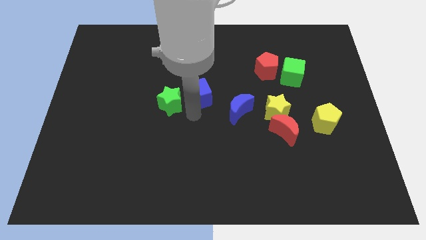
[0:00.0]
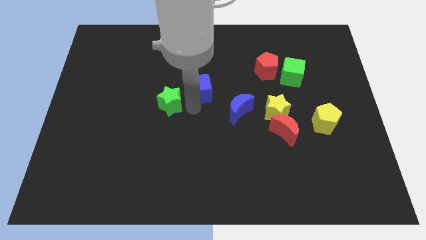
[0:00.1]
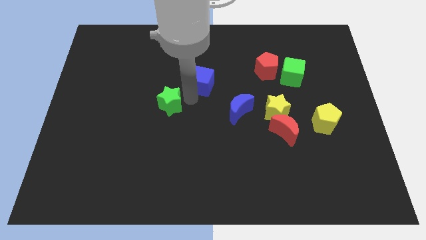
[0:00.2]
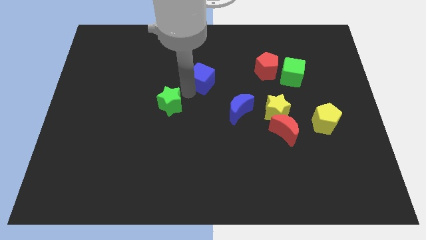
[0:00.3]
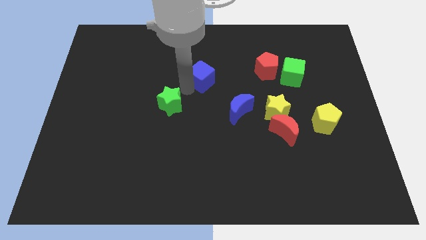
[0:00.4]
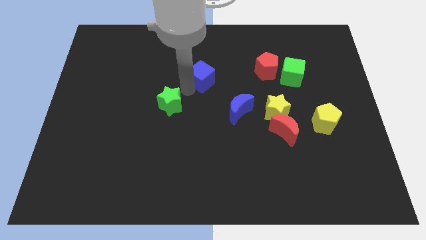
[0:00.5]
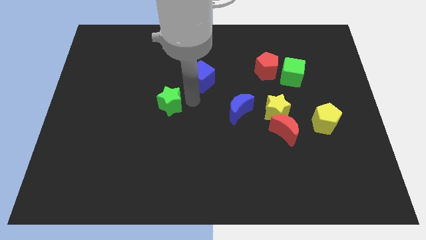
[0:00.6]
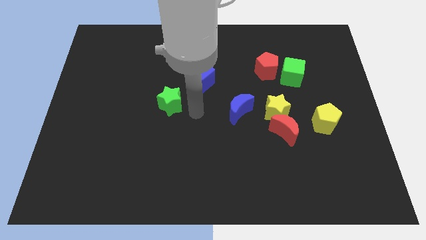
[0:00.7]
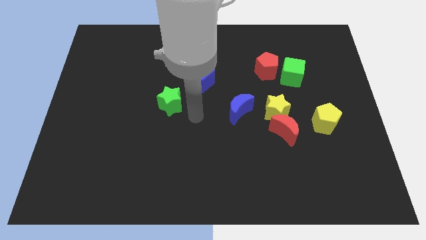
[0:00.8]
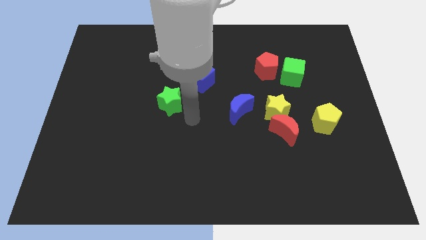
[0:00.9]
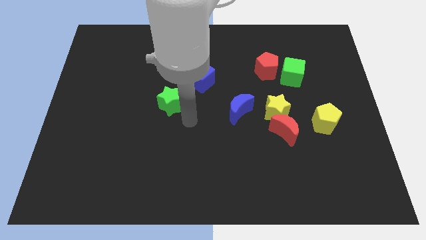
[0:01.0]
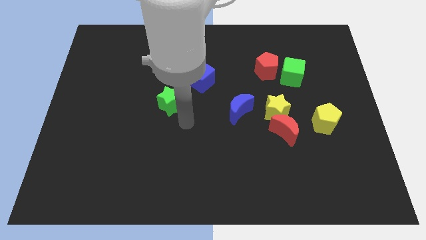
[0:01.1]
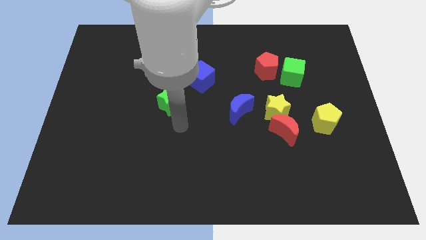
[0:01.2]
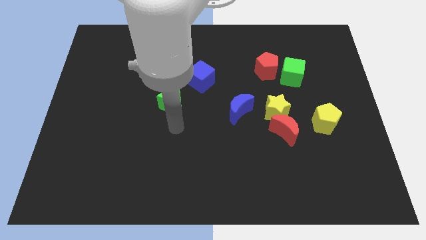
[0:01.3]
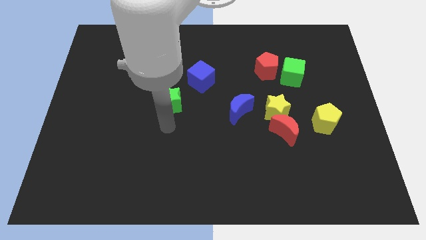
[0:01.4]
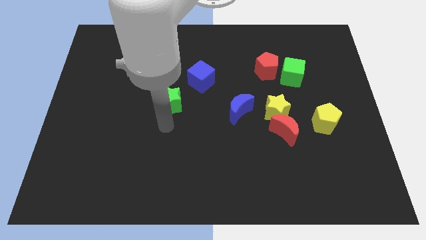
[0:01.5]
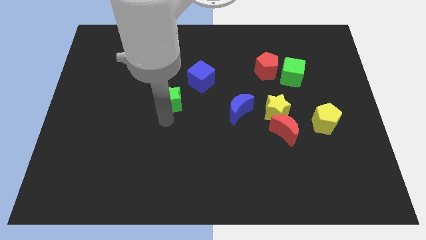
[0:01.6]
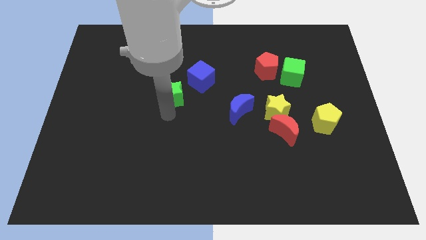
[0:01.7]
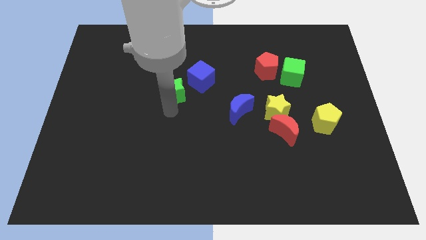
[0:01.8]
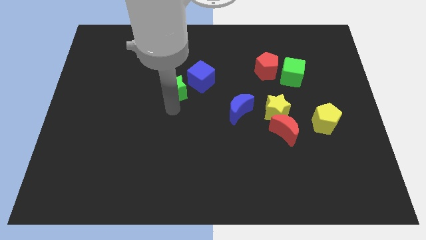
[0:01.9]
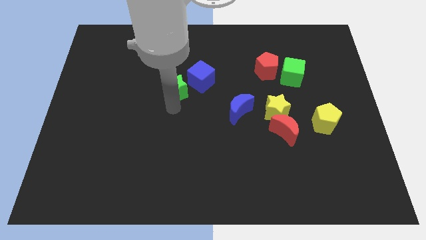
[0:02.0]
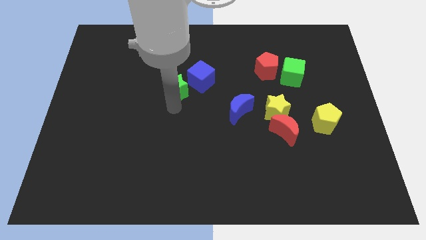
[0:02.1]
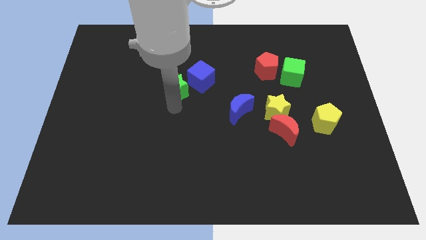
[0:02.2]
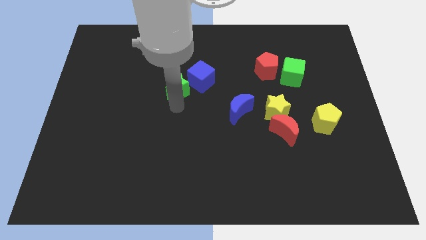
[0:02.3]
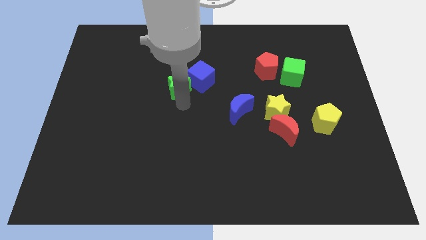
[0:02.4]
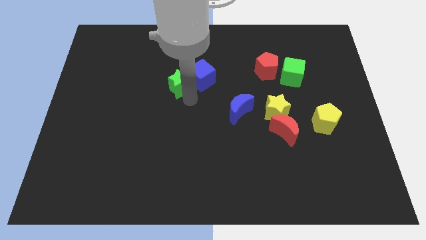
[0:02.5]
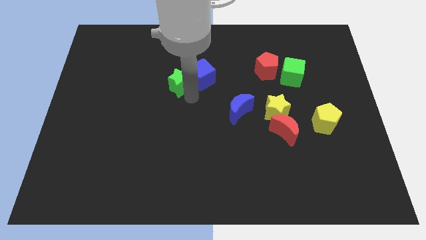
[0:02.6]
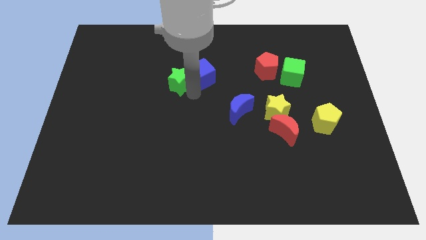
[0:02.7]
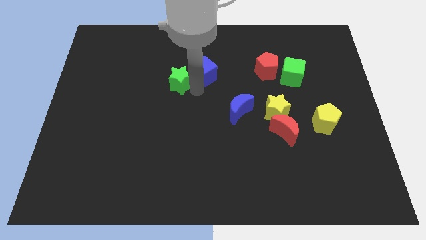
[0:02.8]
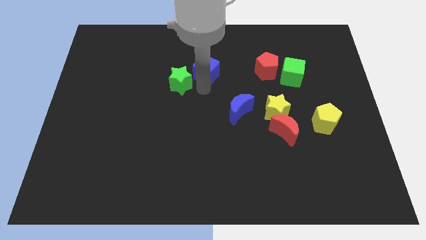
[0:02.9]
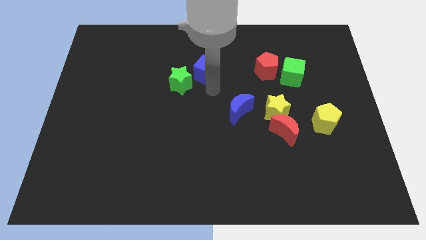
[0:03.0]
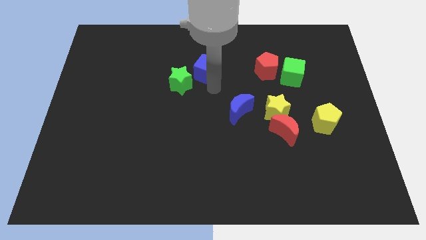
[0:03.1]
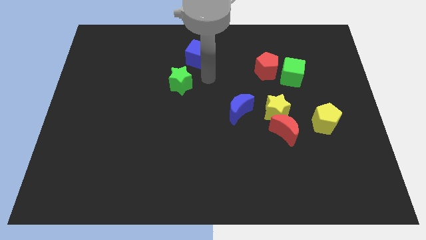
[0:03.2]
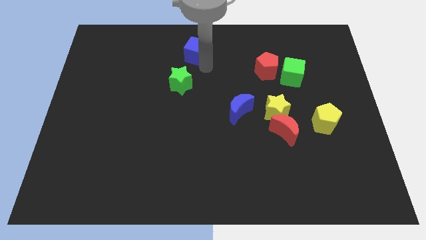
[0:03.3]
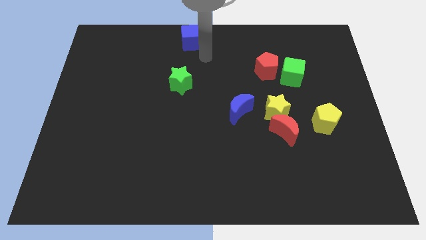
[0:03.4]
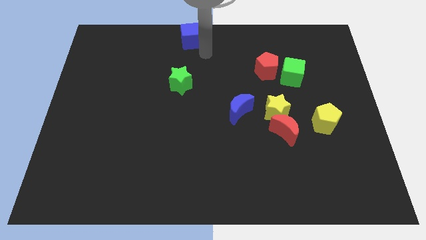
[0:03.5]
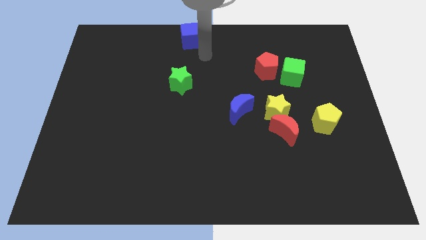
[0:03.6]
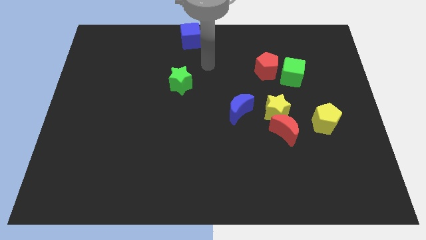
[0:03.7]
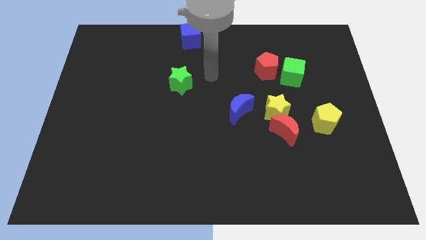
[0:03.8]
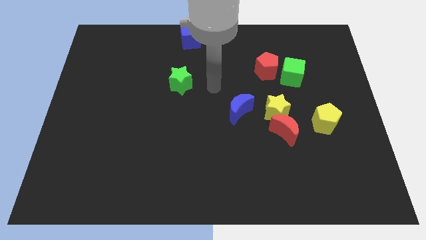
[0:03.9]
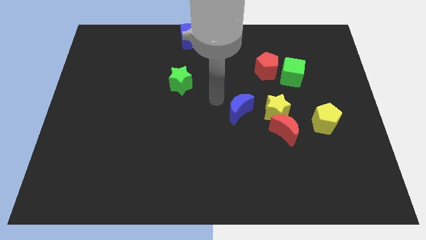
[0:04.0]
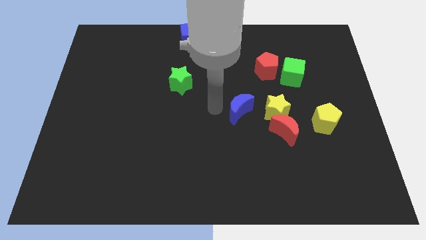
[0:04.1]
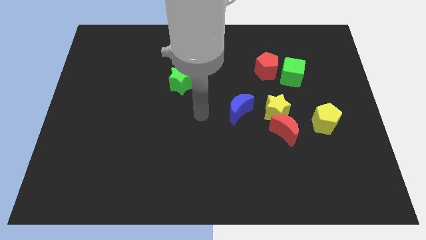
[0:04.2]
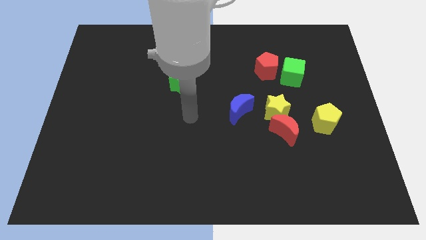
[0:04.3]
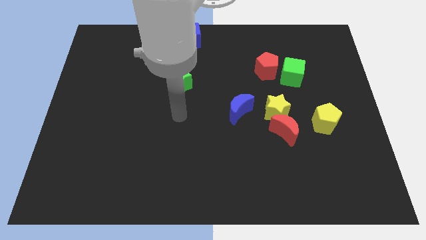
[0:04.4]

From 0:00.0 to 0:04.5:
push the blue cube away from the green star

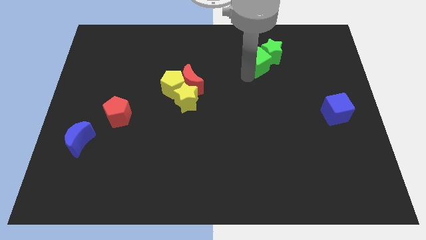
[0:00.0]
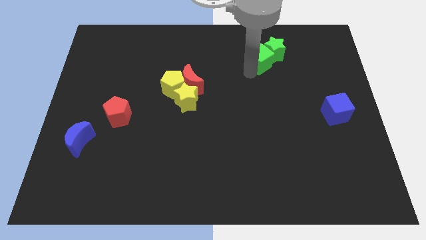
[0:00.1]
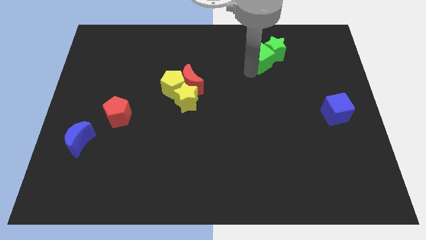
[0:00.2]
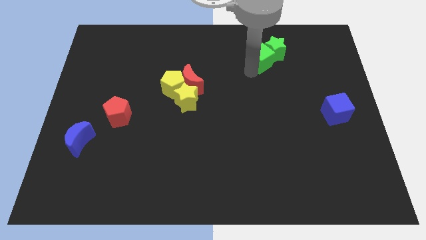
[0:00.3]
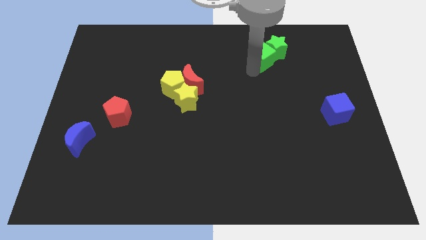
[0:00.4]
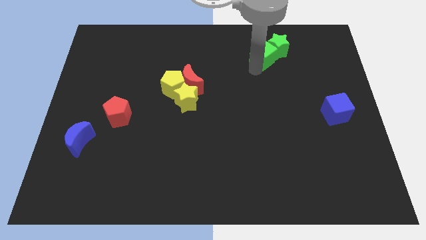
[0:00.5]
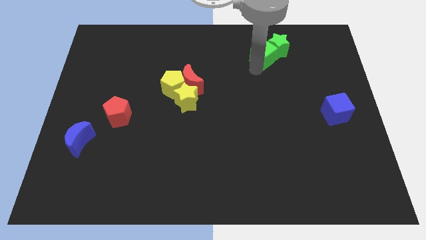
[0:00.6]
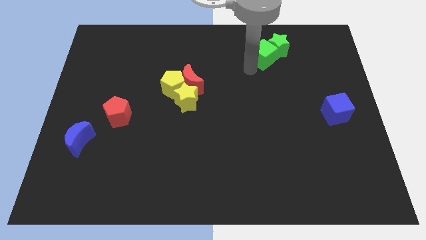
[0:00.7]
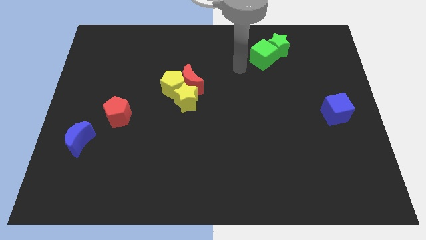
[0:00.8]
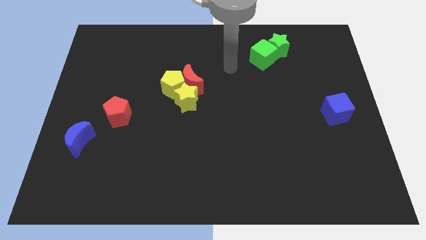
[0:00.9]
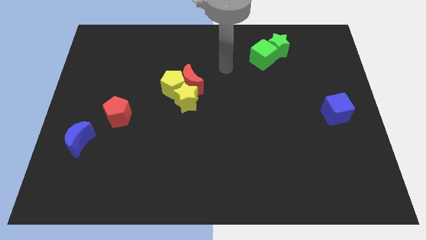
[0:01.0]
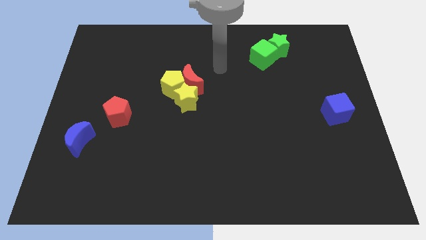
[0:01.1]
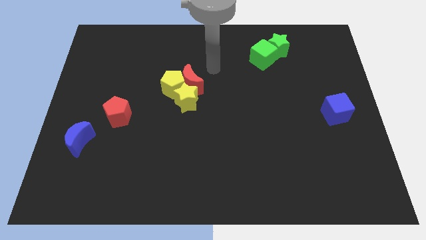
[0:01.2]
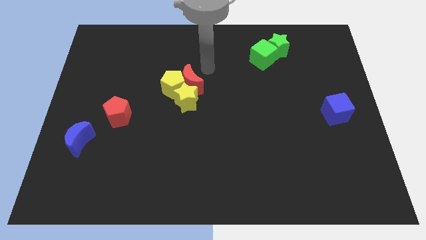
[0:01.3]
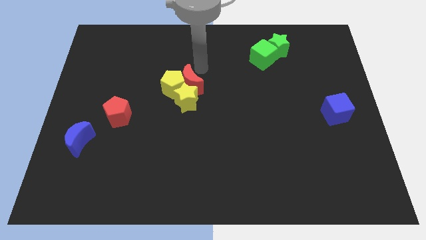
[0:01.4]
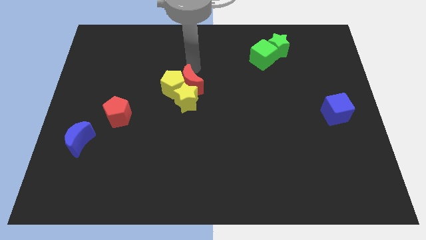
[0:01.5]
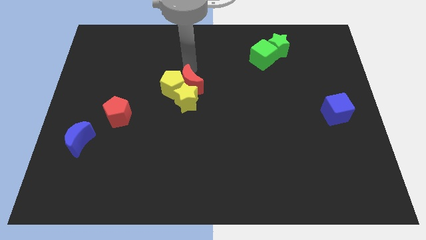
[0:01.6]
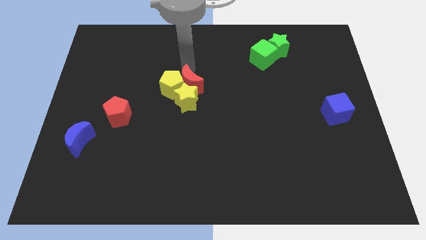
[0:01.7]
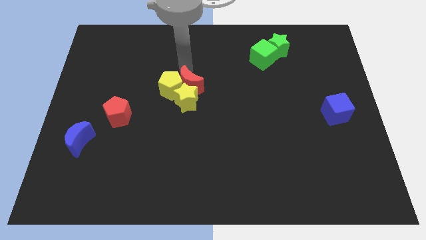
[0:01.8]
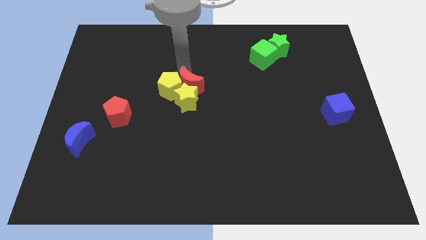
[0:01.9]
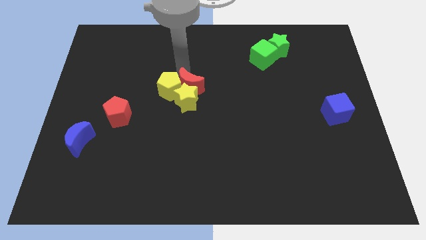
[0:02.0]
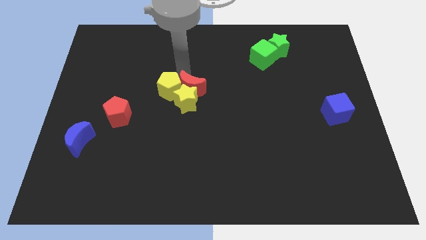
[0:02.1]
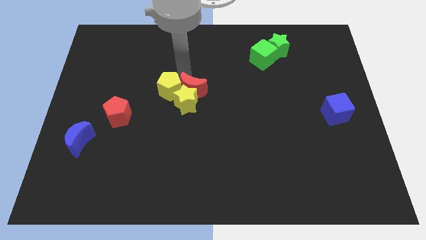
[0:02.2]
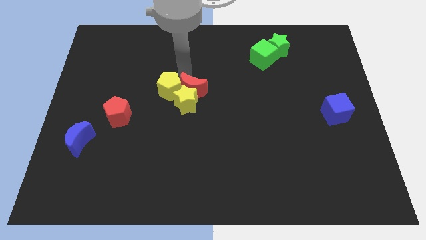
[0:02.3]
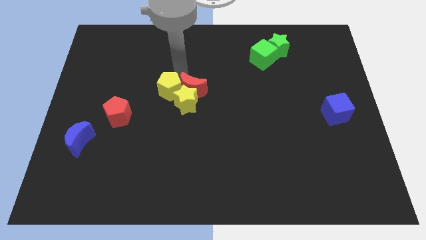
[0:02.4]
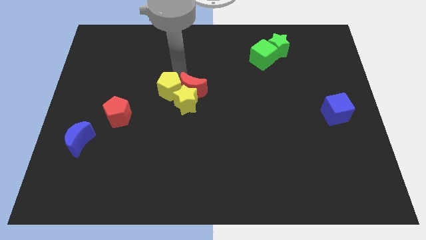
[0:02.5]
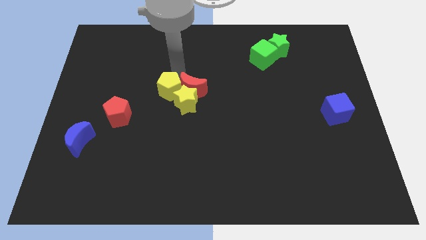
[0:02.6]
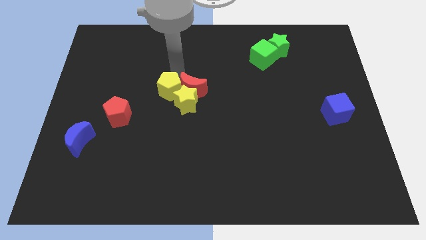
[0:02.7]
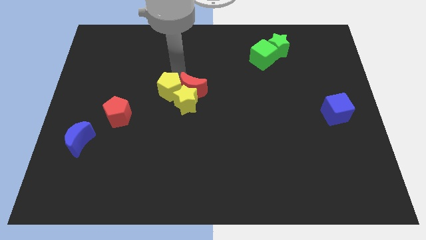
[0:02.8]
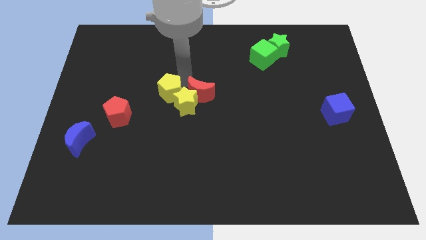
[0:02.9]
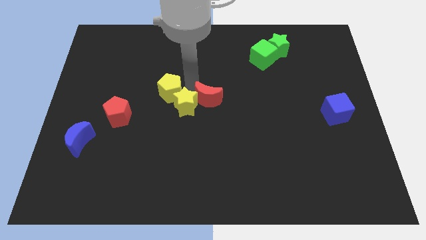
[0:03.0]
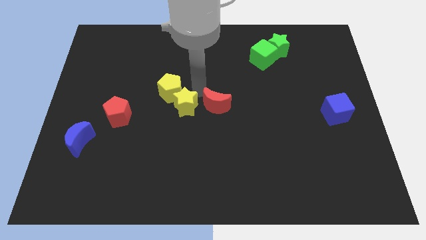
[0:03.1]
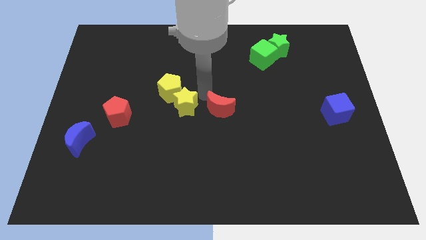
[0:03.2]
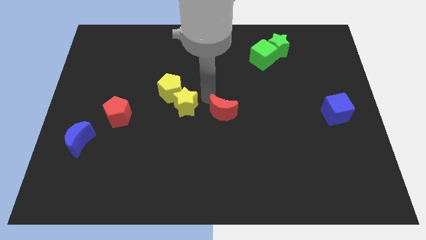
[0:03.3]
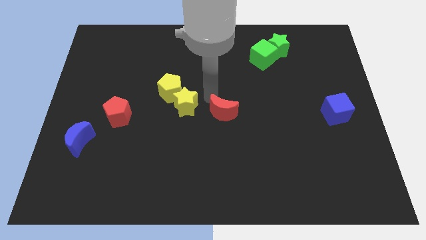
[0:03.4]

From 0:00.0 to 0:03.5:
drag the red moon to the center

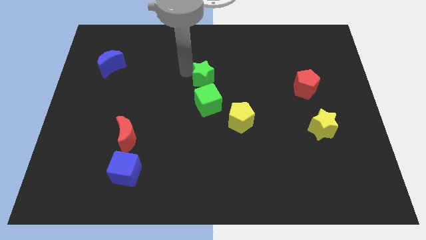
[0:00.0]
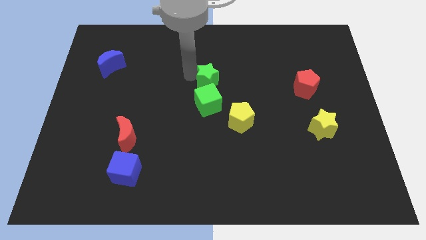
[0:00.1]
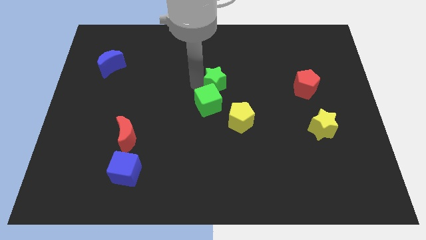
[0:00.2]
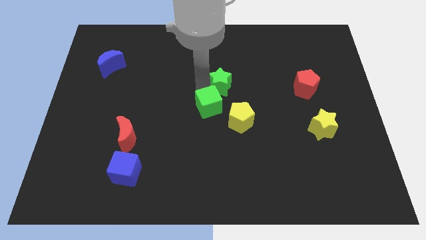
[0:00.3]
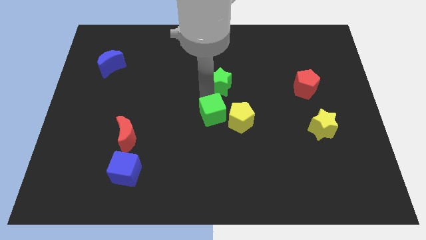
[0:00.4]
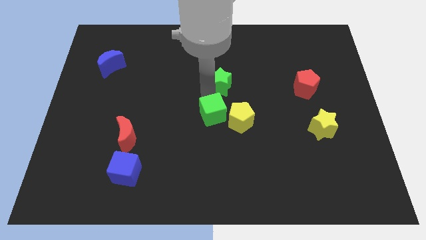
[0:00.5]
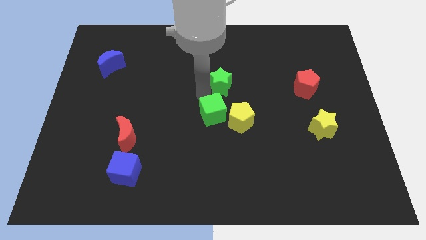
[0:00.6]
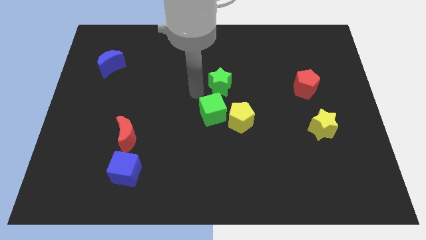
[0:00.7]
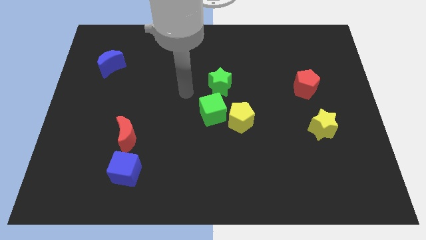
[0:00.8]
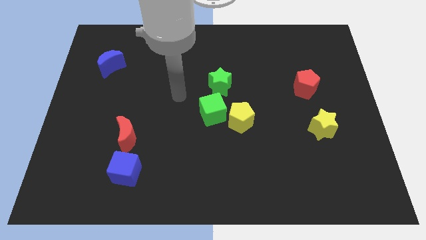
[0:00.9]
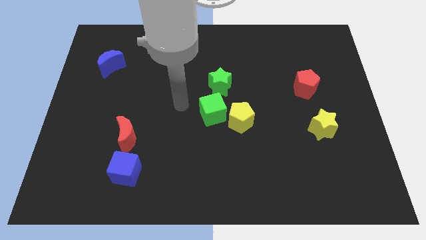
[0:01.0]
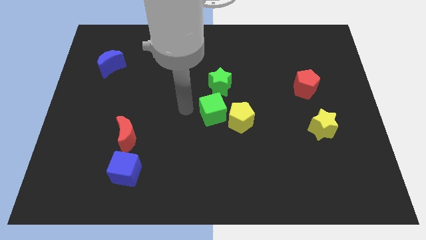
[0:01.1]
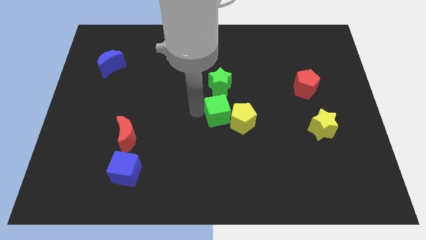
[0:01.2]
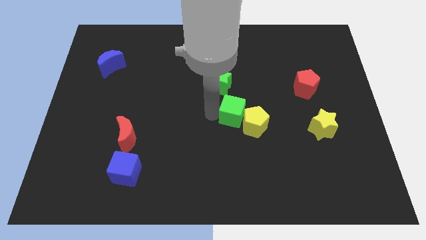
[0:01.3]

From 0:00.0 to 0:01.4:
push the green cube towards the yellow pentagon
